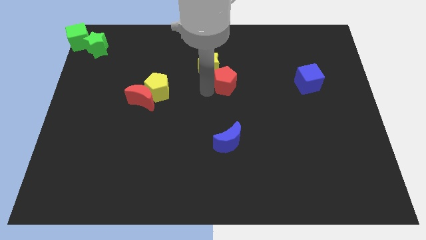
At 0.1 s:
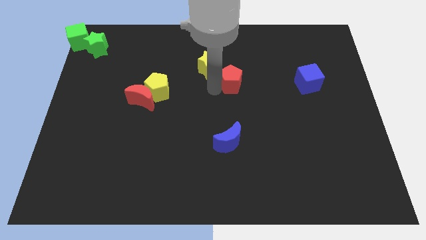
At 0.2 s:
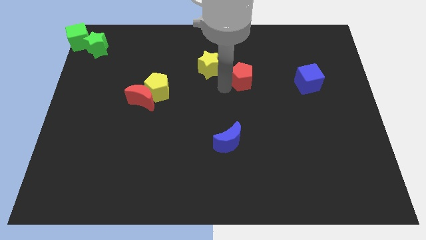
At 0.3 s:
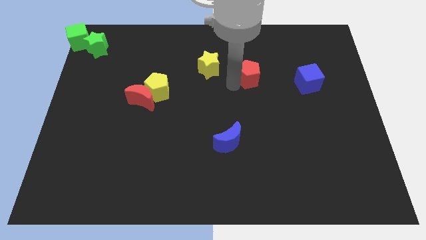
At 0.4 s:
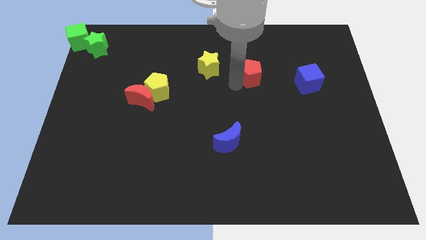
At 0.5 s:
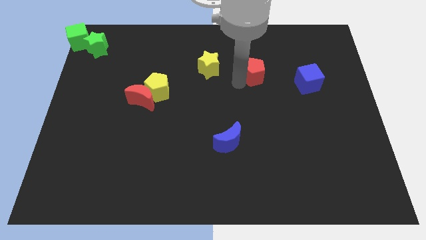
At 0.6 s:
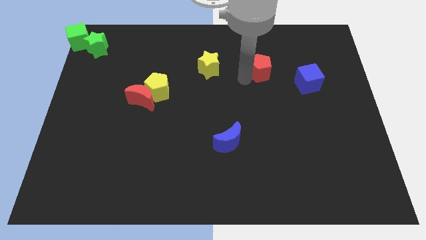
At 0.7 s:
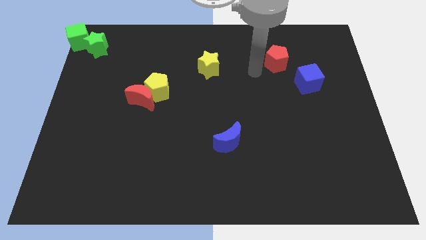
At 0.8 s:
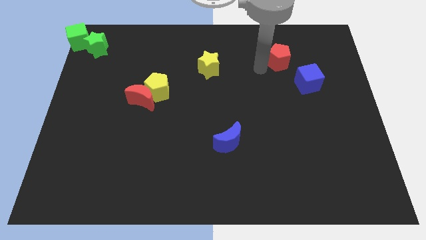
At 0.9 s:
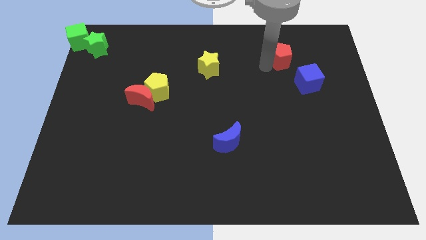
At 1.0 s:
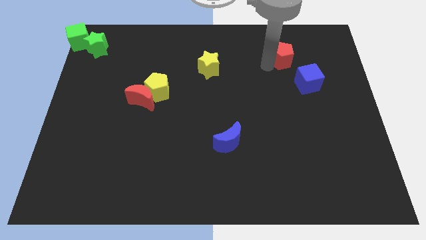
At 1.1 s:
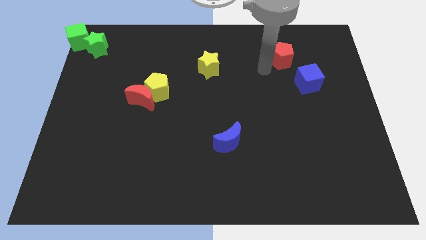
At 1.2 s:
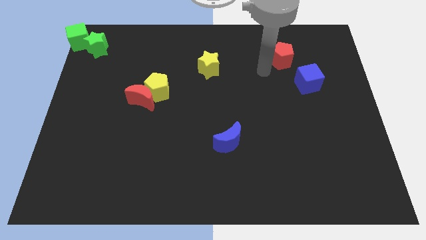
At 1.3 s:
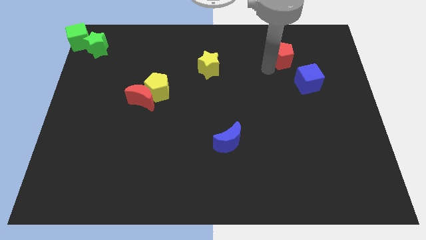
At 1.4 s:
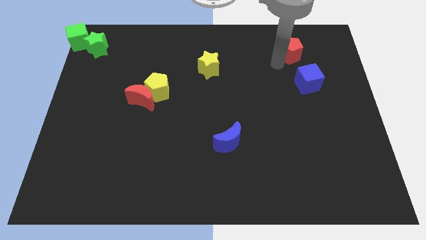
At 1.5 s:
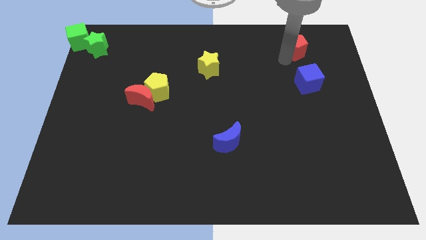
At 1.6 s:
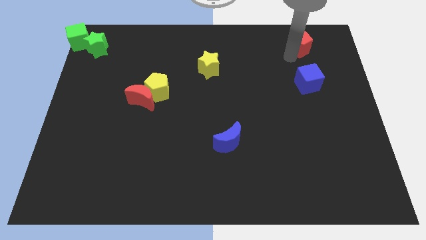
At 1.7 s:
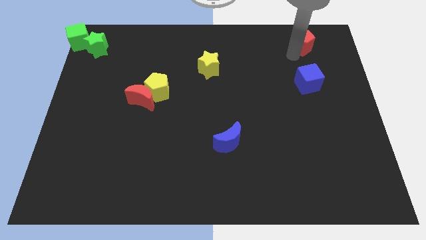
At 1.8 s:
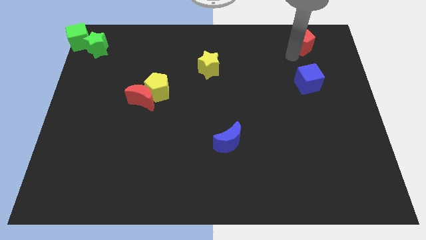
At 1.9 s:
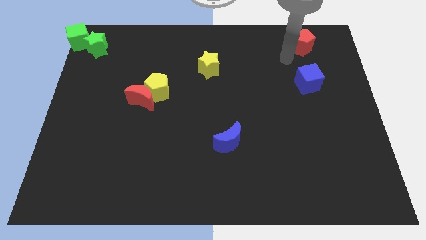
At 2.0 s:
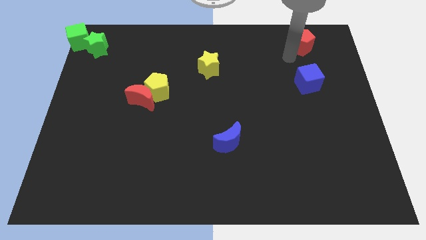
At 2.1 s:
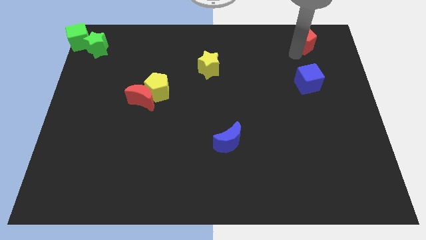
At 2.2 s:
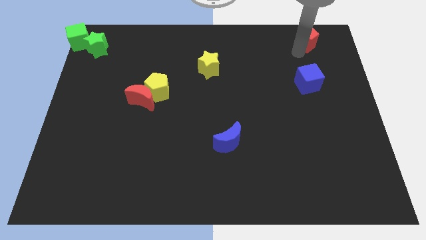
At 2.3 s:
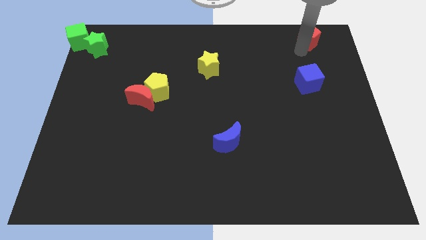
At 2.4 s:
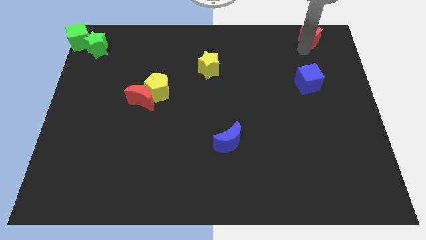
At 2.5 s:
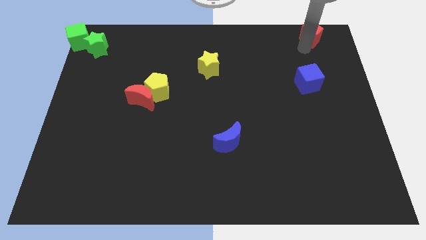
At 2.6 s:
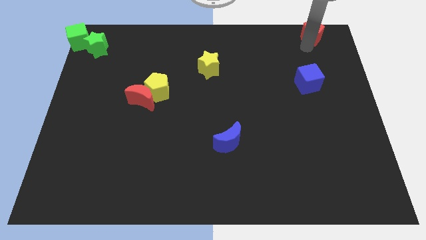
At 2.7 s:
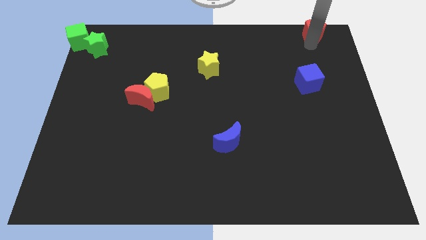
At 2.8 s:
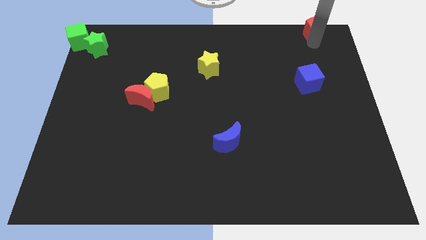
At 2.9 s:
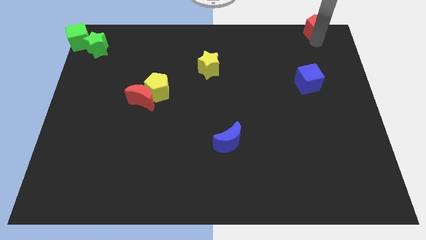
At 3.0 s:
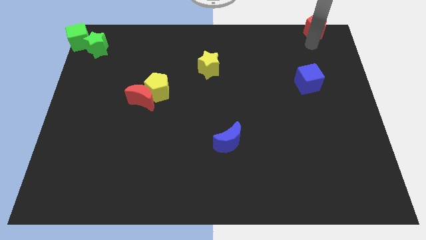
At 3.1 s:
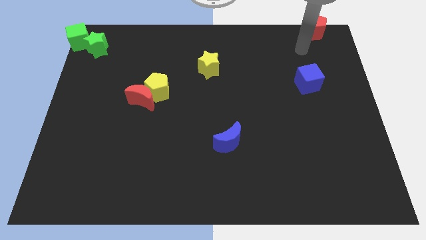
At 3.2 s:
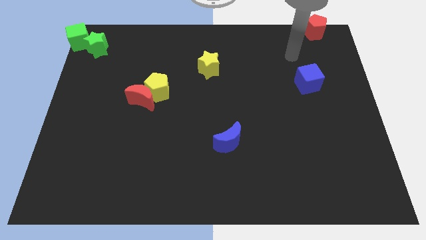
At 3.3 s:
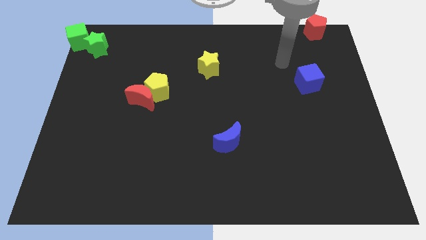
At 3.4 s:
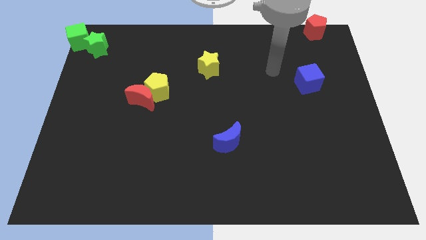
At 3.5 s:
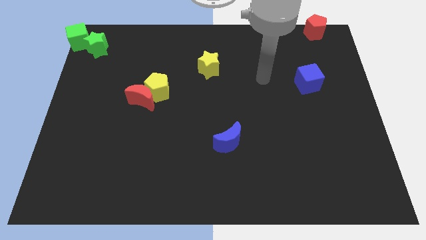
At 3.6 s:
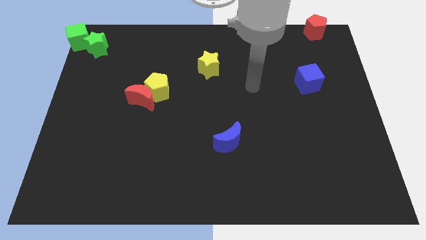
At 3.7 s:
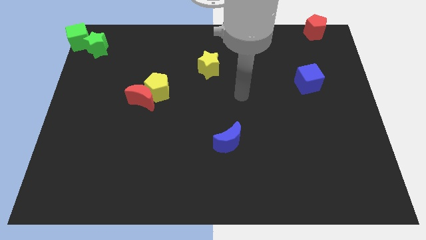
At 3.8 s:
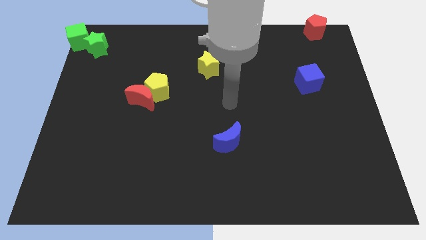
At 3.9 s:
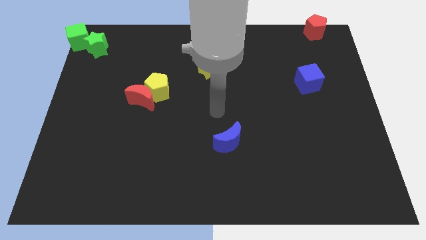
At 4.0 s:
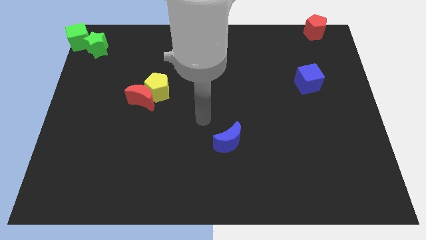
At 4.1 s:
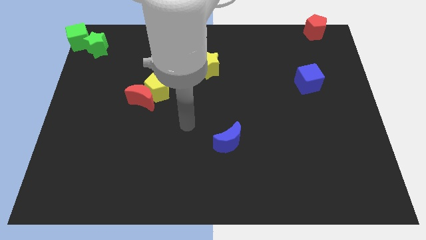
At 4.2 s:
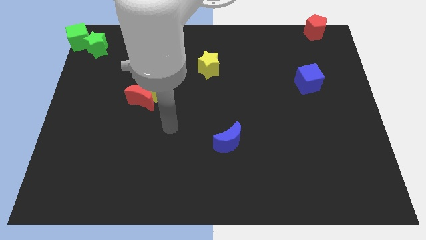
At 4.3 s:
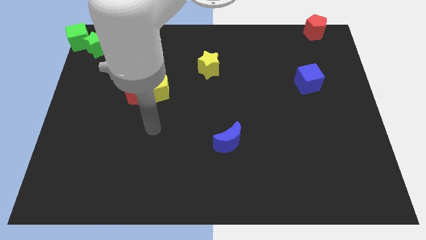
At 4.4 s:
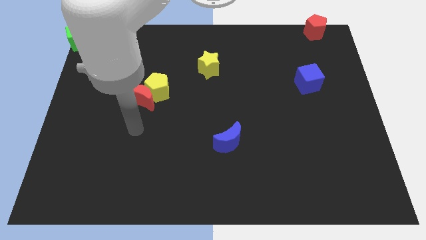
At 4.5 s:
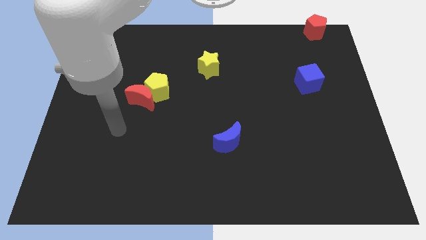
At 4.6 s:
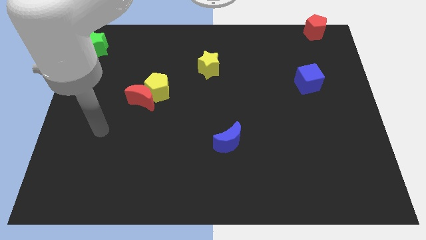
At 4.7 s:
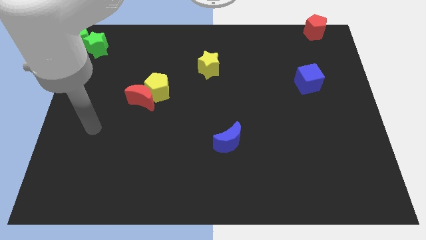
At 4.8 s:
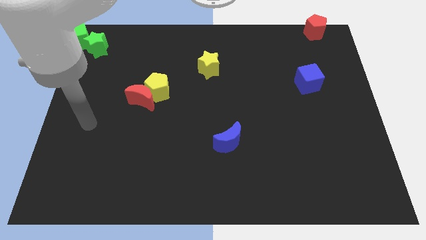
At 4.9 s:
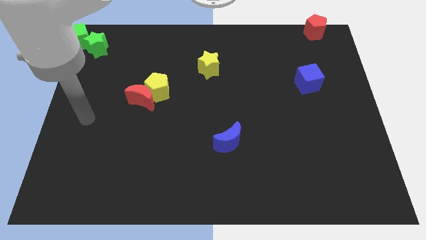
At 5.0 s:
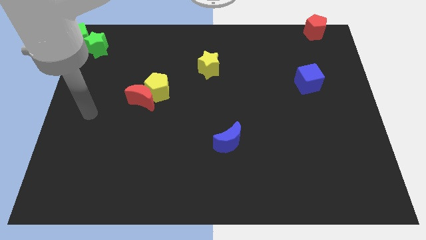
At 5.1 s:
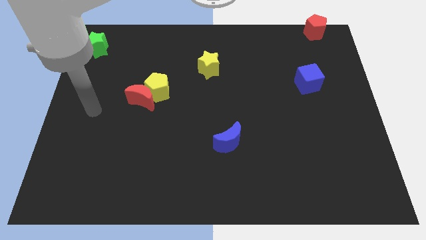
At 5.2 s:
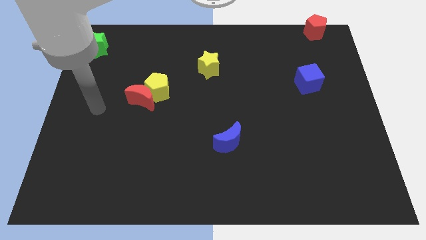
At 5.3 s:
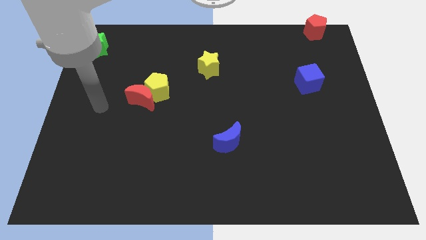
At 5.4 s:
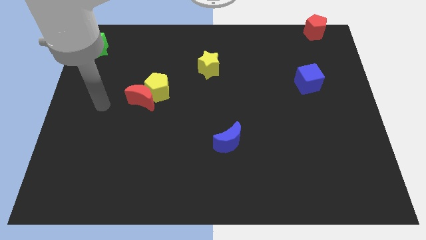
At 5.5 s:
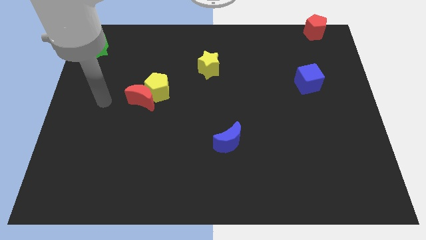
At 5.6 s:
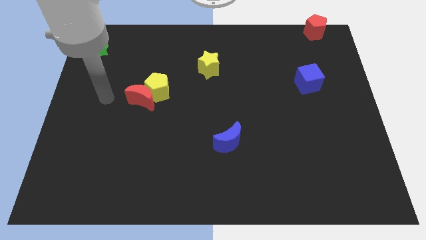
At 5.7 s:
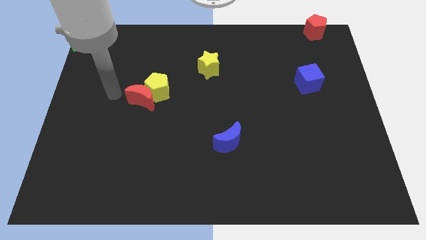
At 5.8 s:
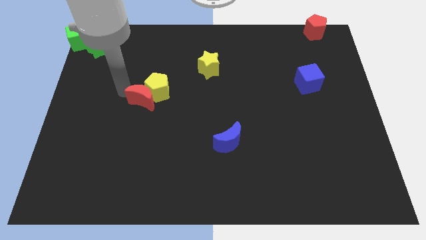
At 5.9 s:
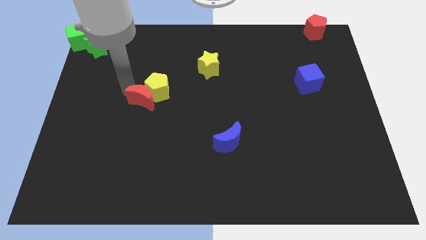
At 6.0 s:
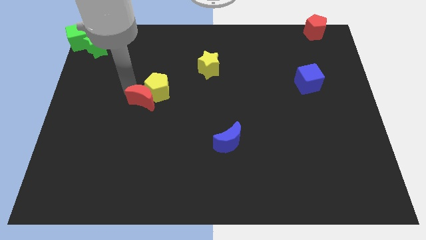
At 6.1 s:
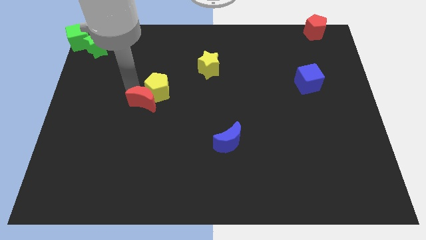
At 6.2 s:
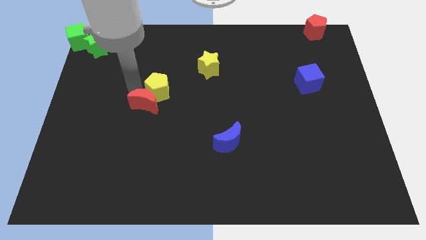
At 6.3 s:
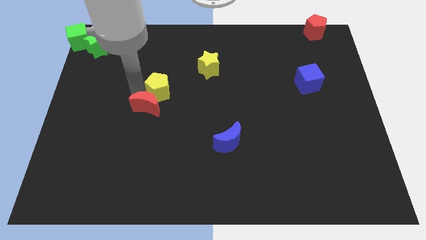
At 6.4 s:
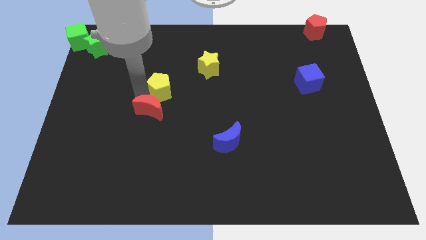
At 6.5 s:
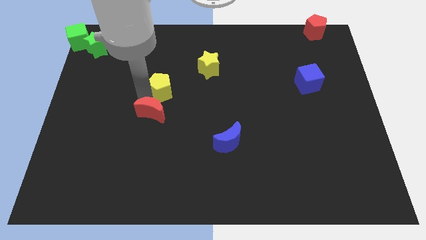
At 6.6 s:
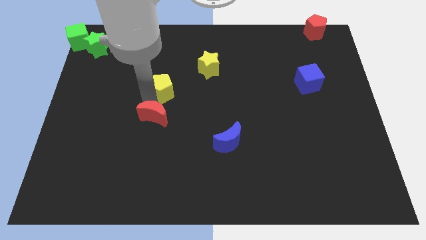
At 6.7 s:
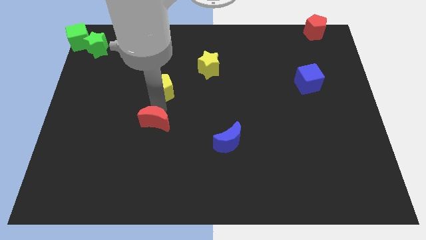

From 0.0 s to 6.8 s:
move the red pentagon to the top right corner of the board

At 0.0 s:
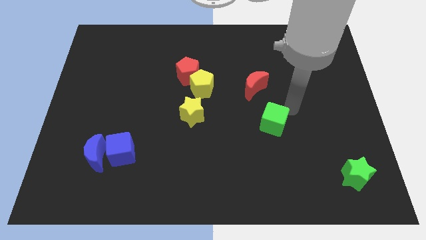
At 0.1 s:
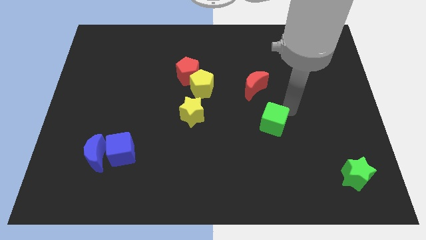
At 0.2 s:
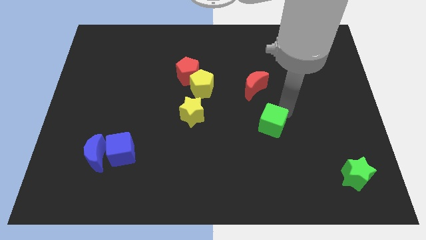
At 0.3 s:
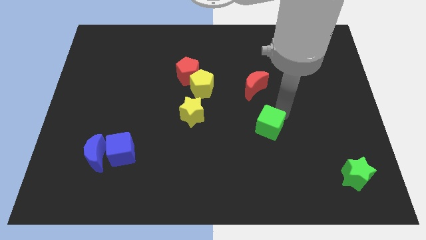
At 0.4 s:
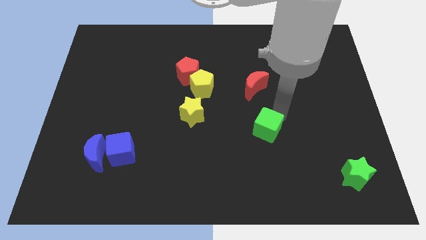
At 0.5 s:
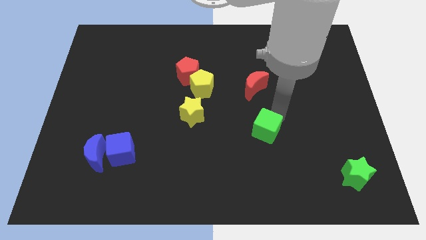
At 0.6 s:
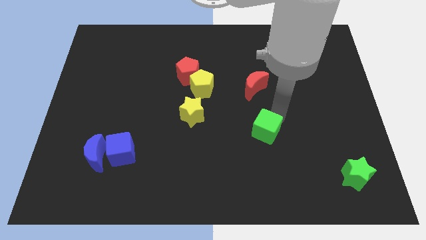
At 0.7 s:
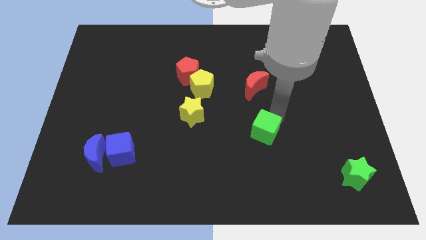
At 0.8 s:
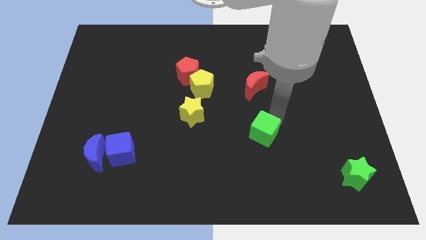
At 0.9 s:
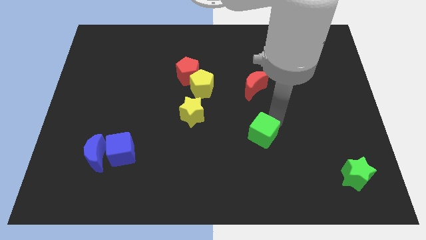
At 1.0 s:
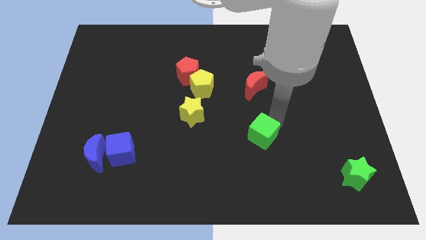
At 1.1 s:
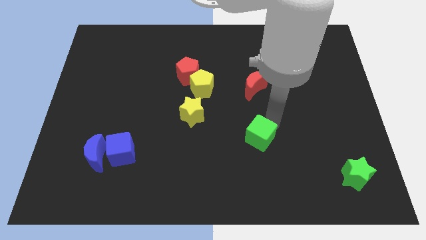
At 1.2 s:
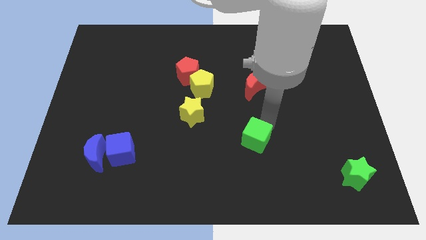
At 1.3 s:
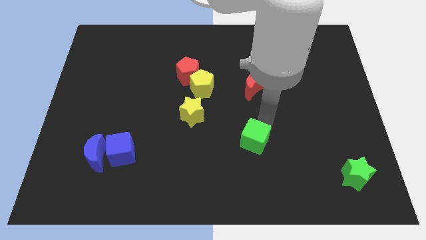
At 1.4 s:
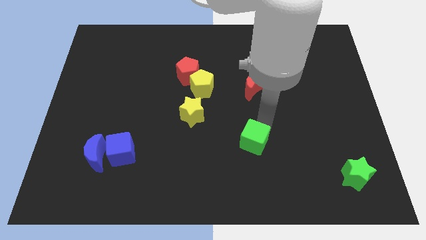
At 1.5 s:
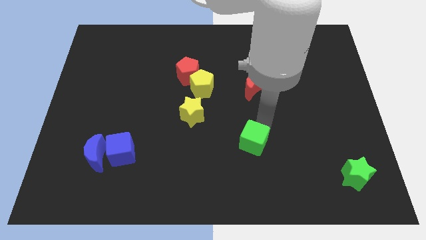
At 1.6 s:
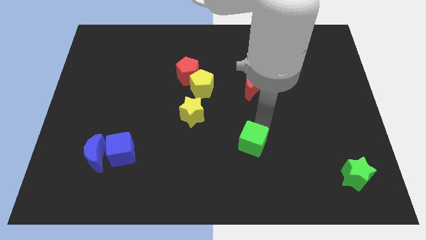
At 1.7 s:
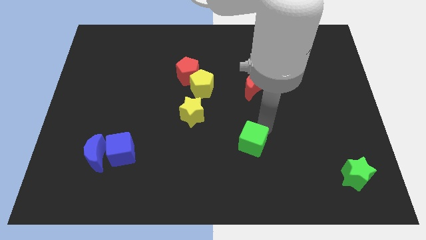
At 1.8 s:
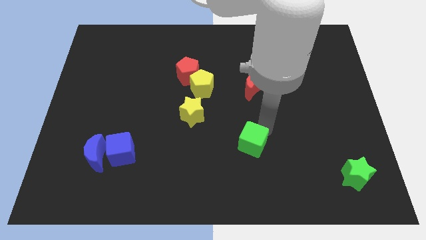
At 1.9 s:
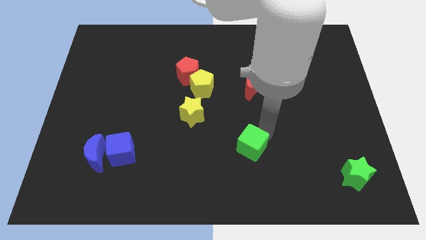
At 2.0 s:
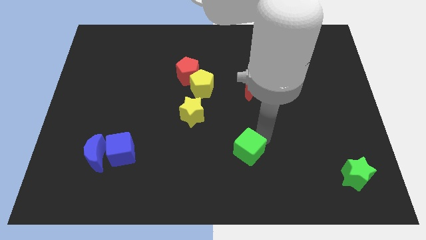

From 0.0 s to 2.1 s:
push green cube away from the red moon
